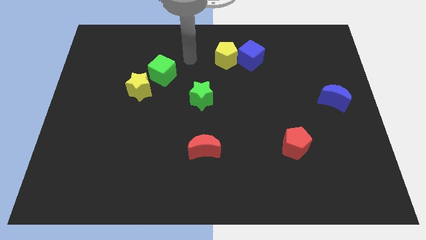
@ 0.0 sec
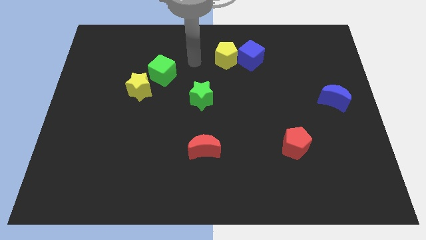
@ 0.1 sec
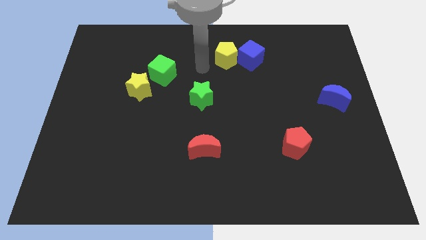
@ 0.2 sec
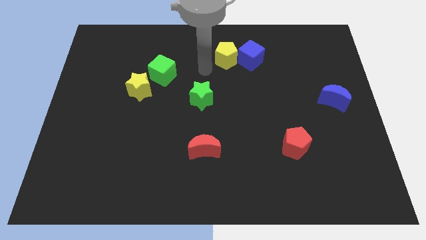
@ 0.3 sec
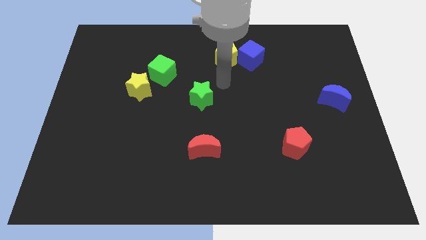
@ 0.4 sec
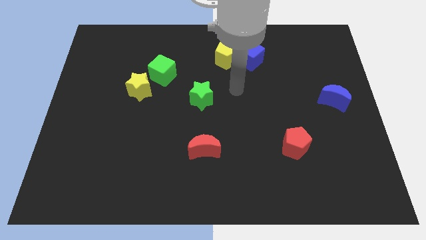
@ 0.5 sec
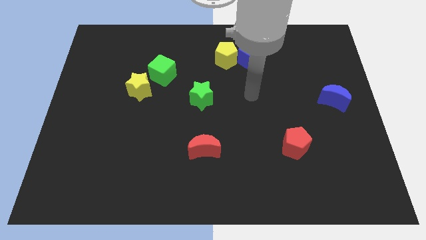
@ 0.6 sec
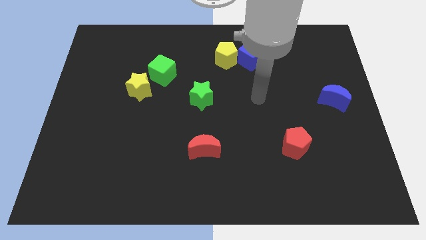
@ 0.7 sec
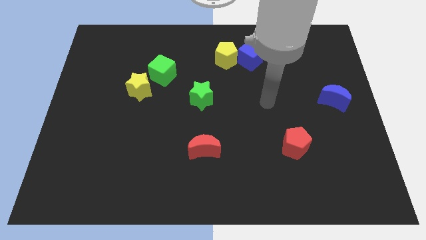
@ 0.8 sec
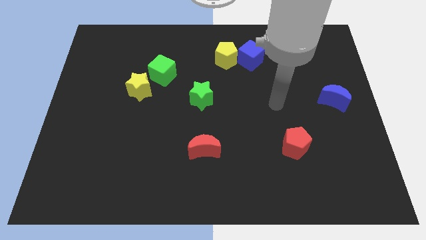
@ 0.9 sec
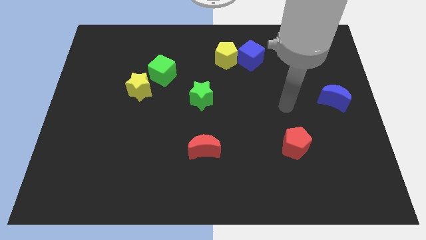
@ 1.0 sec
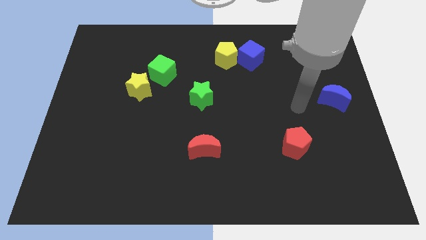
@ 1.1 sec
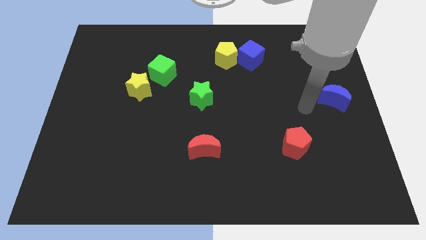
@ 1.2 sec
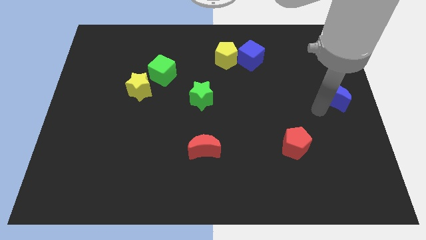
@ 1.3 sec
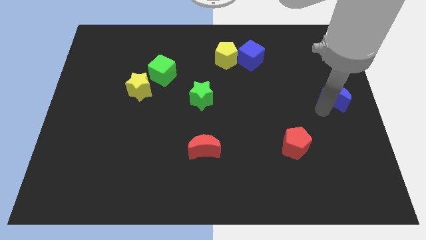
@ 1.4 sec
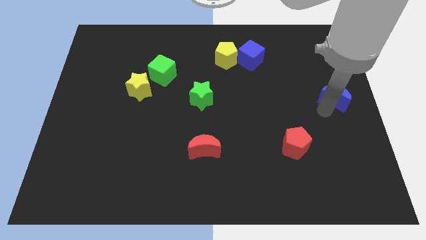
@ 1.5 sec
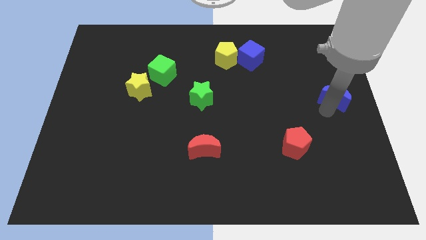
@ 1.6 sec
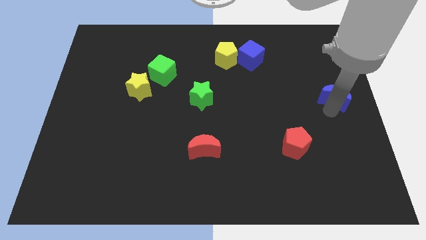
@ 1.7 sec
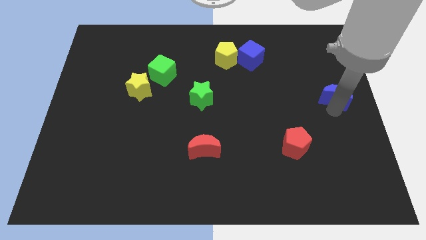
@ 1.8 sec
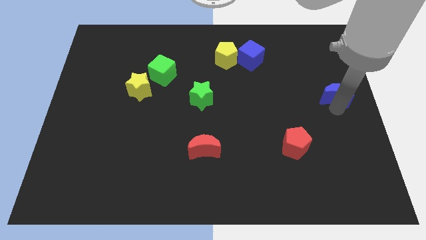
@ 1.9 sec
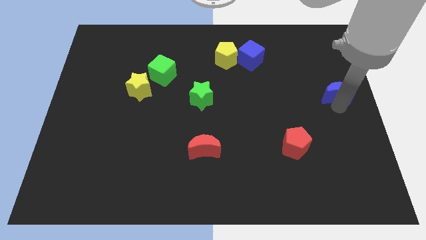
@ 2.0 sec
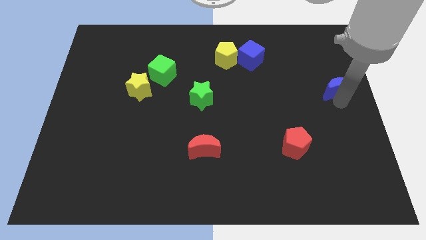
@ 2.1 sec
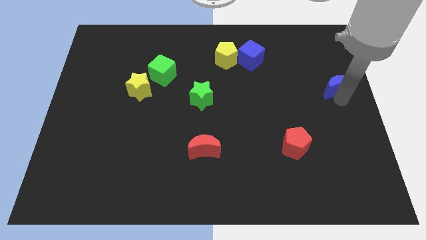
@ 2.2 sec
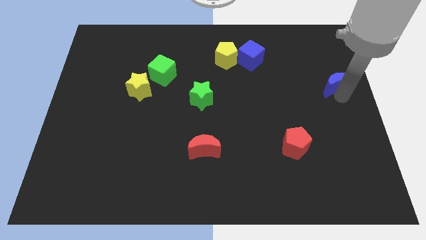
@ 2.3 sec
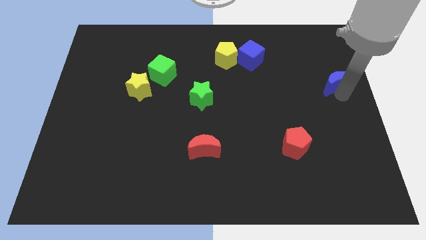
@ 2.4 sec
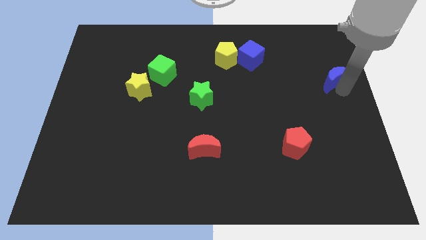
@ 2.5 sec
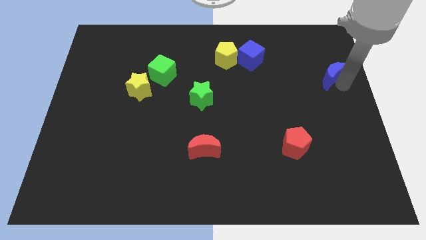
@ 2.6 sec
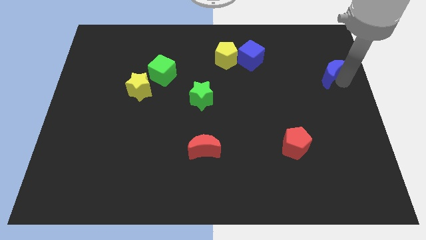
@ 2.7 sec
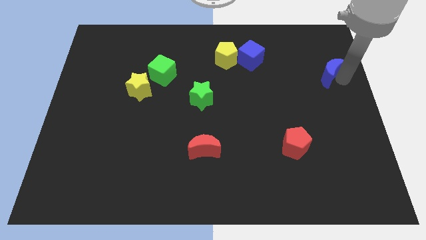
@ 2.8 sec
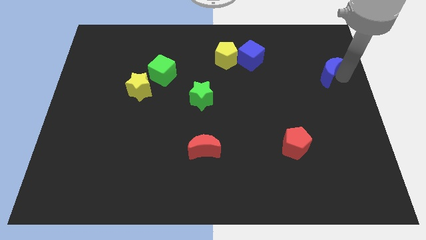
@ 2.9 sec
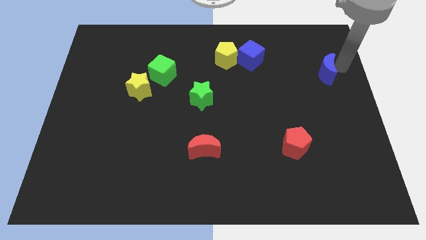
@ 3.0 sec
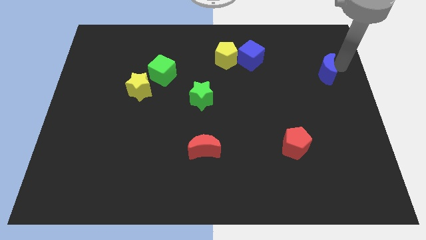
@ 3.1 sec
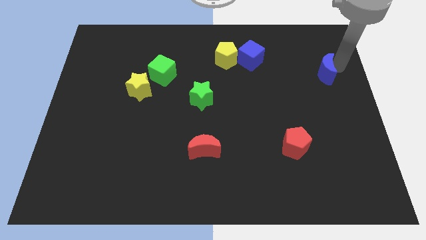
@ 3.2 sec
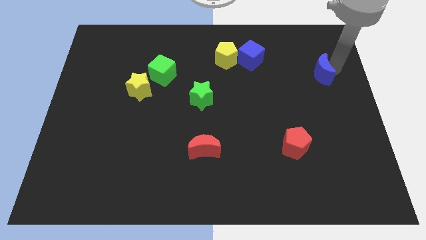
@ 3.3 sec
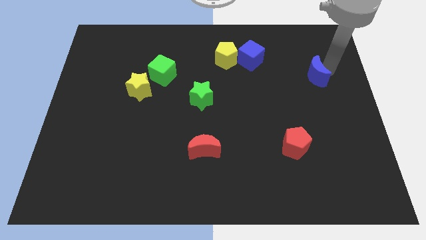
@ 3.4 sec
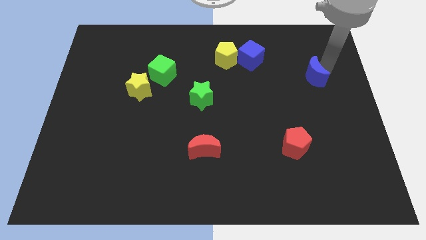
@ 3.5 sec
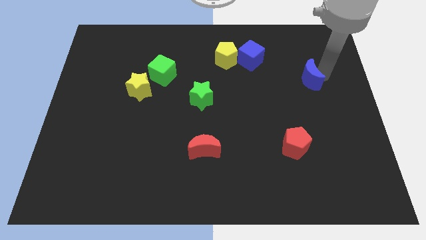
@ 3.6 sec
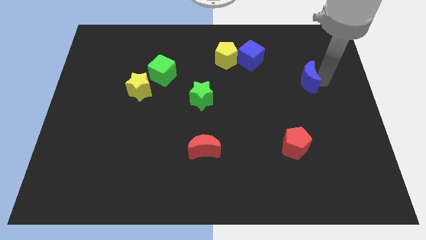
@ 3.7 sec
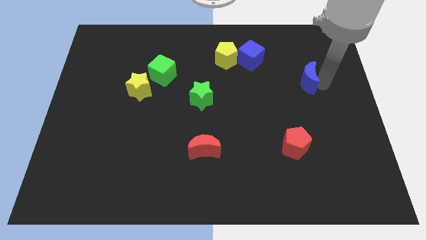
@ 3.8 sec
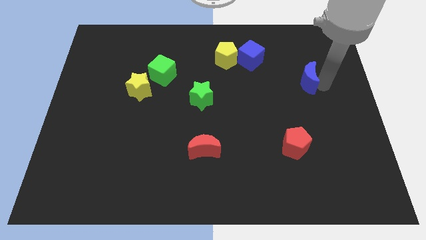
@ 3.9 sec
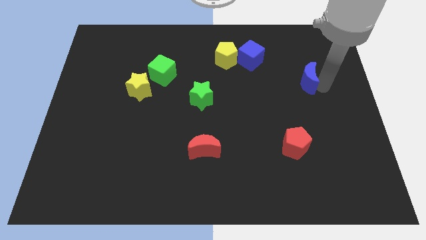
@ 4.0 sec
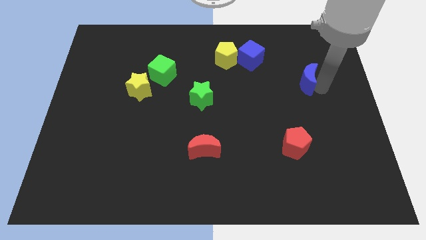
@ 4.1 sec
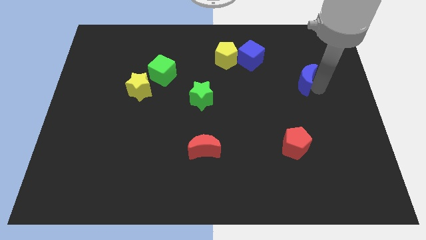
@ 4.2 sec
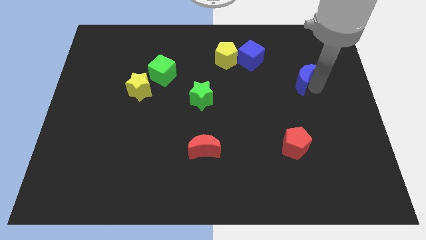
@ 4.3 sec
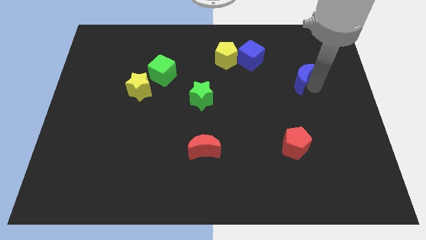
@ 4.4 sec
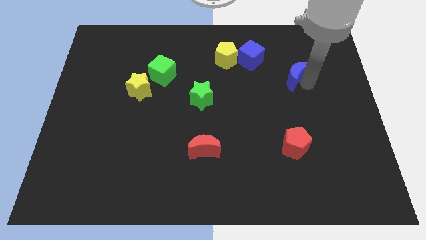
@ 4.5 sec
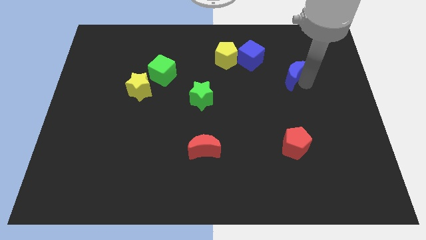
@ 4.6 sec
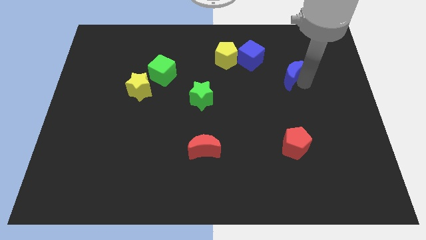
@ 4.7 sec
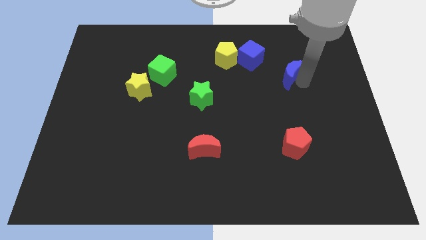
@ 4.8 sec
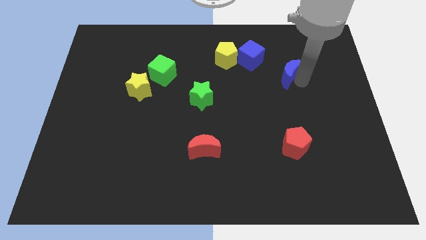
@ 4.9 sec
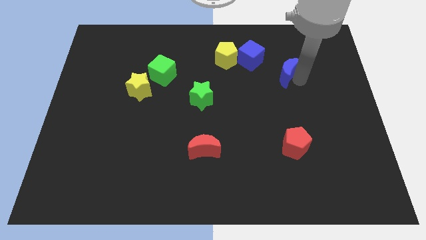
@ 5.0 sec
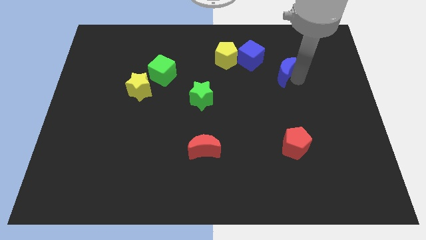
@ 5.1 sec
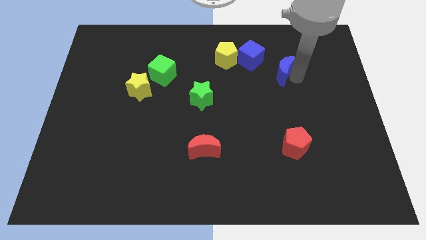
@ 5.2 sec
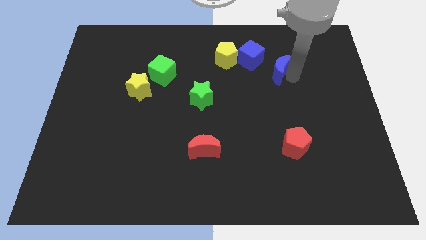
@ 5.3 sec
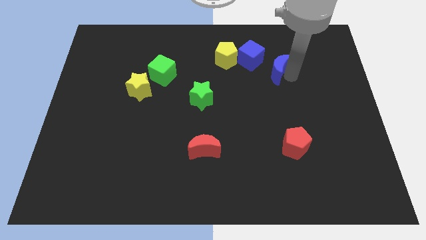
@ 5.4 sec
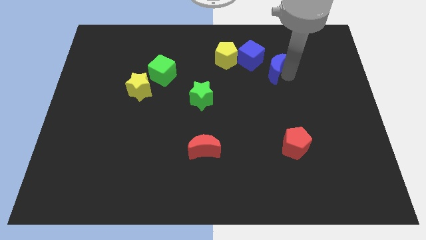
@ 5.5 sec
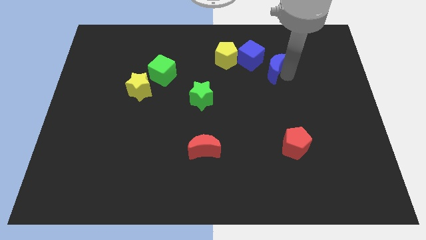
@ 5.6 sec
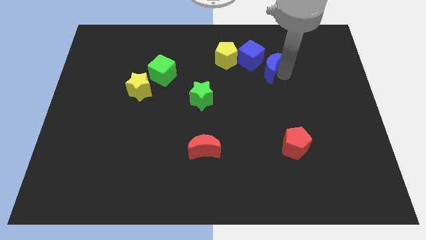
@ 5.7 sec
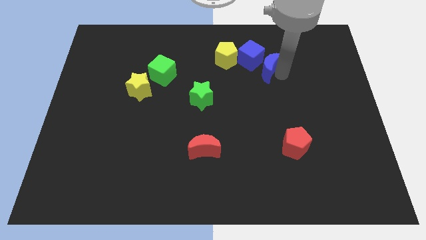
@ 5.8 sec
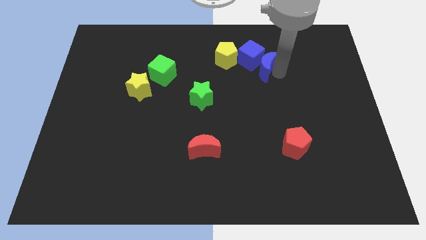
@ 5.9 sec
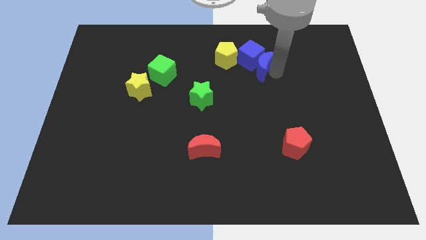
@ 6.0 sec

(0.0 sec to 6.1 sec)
put the blue moon next to the blue cube

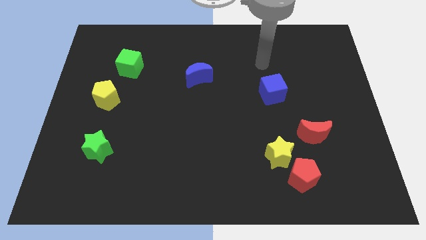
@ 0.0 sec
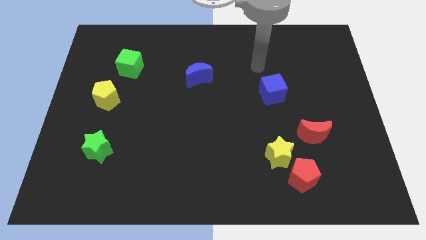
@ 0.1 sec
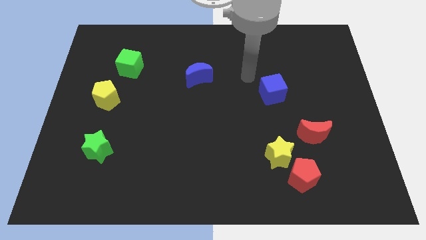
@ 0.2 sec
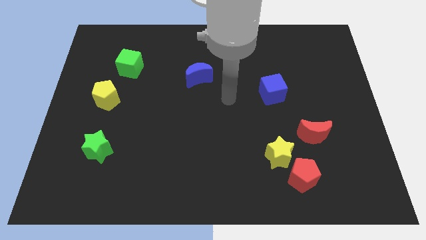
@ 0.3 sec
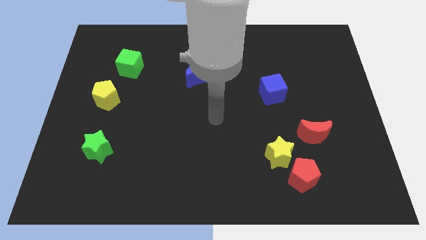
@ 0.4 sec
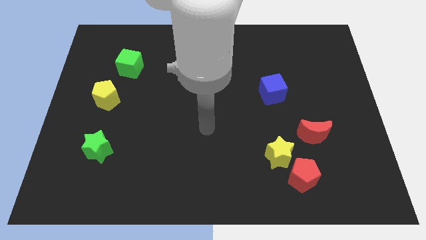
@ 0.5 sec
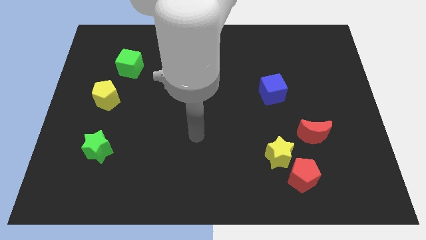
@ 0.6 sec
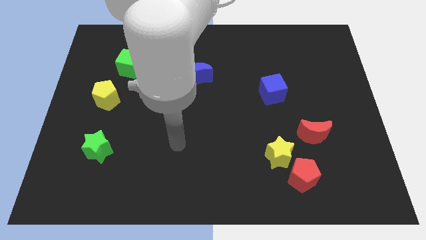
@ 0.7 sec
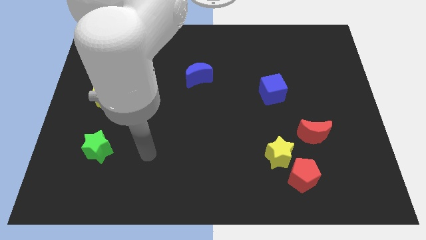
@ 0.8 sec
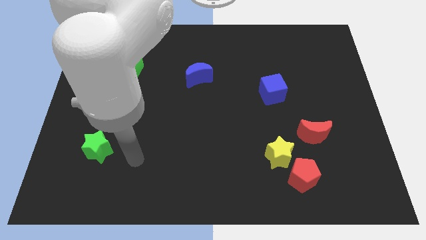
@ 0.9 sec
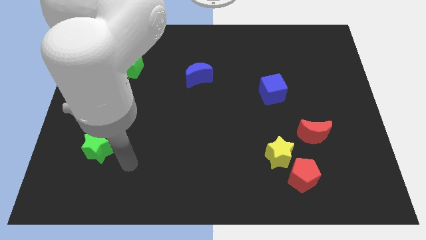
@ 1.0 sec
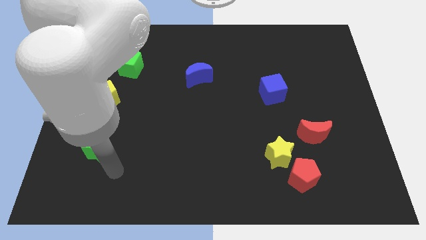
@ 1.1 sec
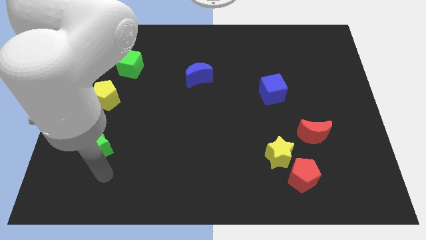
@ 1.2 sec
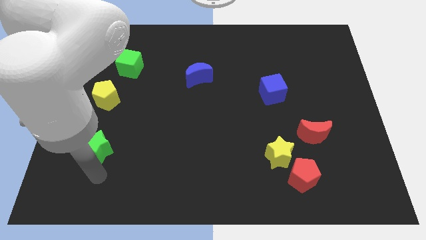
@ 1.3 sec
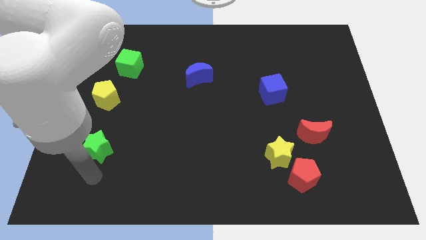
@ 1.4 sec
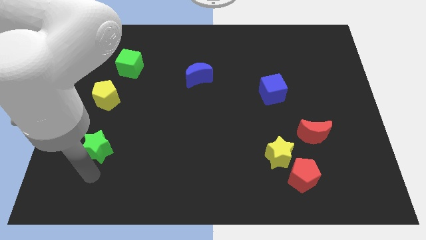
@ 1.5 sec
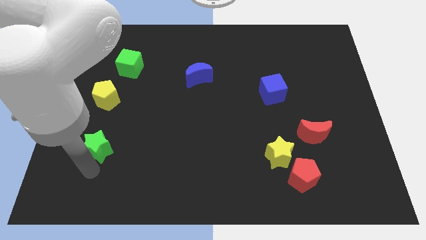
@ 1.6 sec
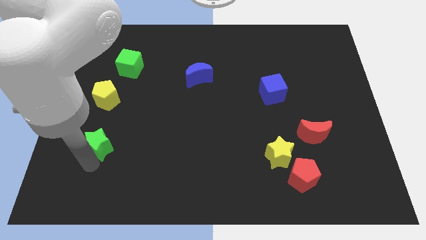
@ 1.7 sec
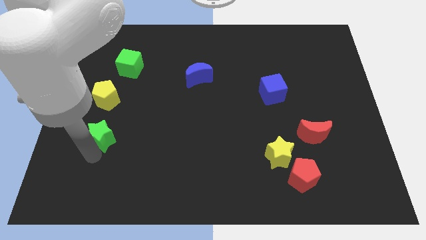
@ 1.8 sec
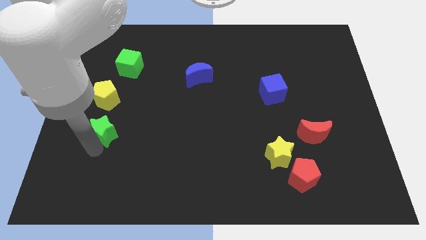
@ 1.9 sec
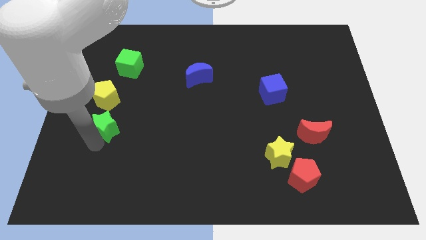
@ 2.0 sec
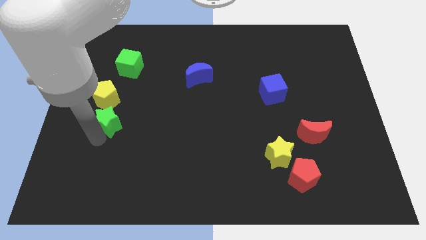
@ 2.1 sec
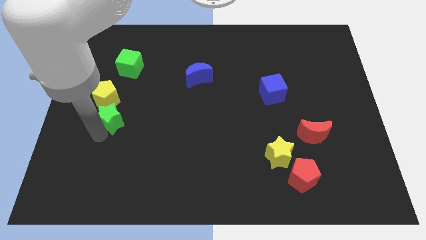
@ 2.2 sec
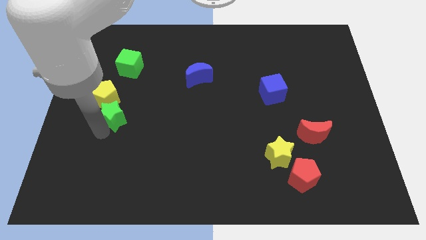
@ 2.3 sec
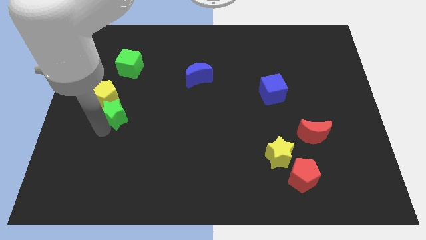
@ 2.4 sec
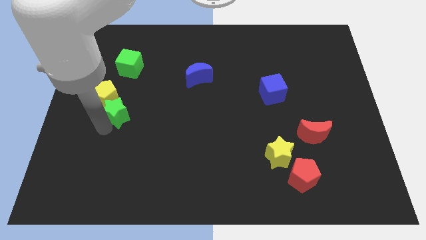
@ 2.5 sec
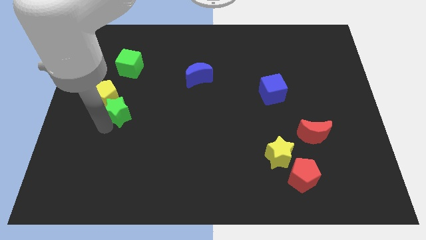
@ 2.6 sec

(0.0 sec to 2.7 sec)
slide the green star to the yellow pentagon
